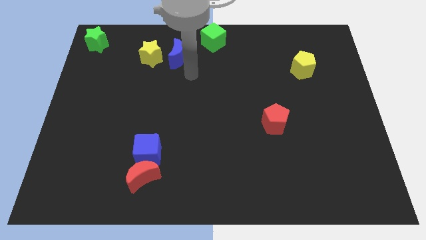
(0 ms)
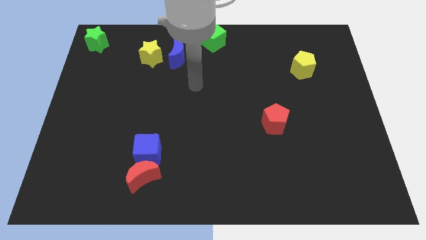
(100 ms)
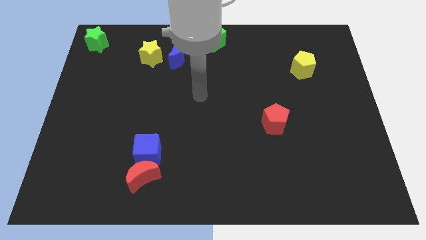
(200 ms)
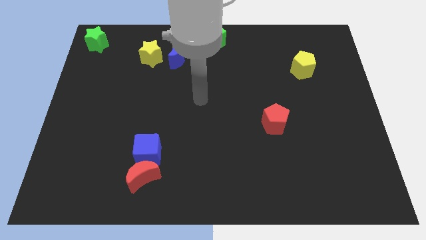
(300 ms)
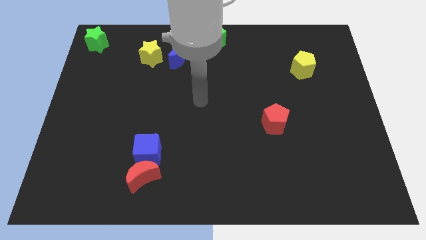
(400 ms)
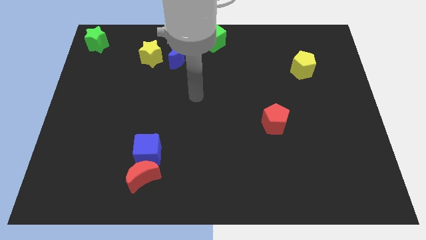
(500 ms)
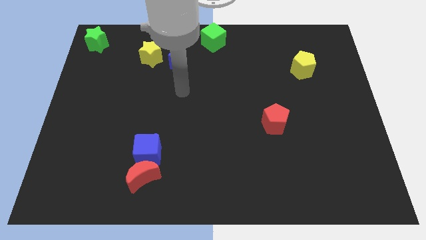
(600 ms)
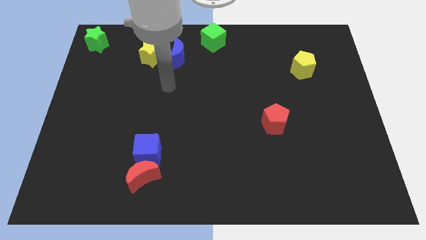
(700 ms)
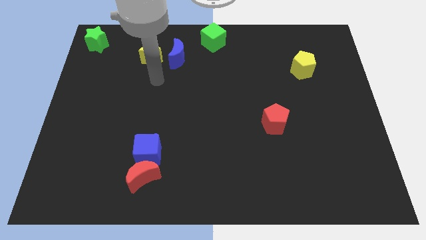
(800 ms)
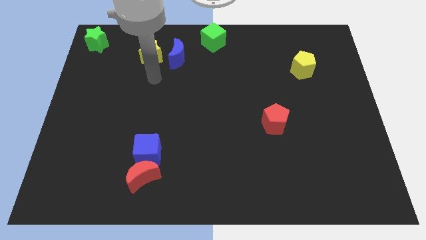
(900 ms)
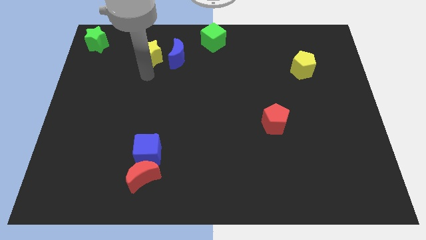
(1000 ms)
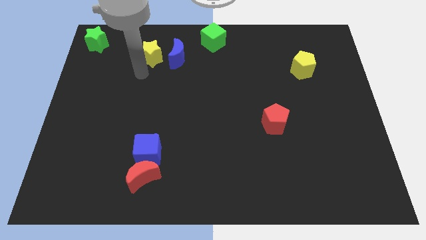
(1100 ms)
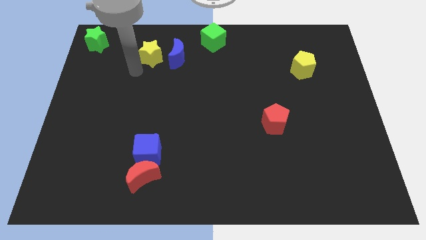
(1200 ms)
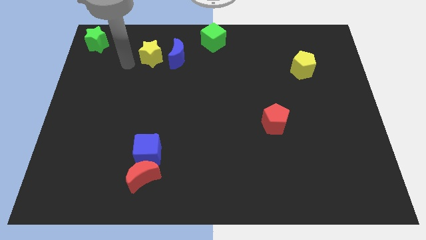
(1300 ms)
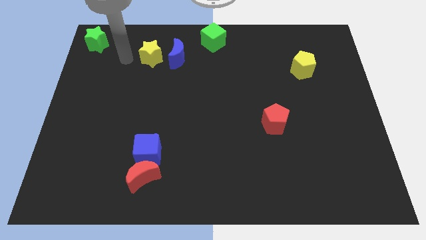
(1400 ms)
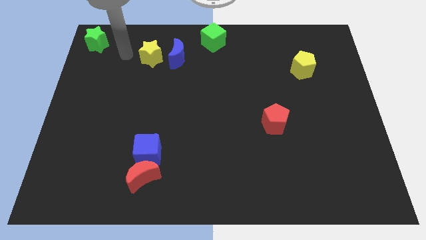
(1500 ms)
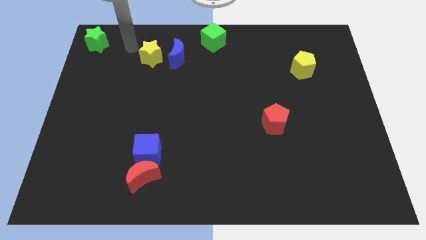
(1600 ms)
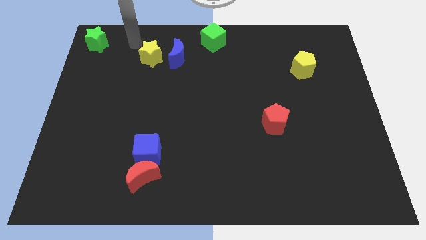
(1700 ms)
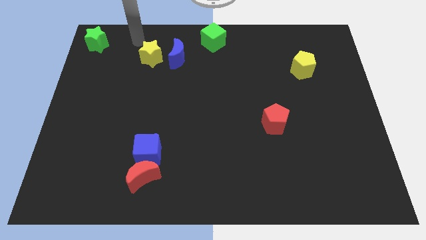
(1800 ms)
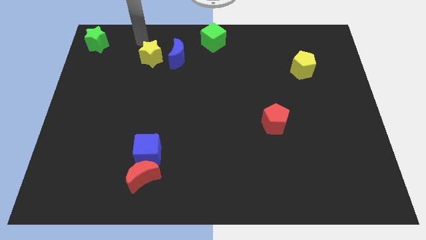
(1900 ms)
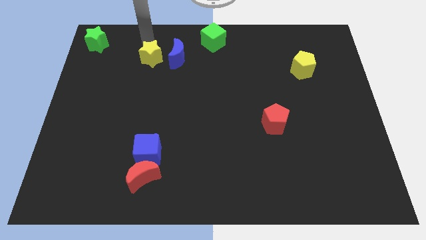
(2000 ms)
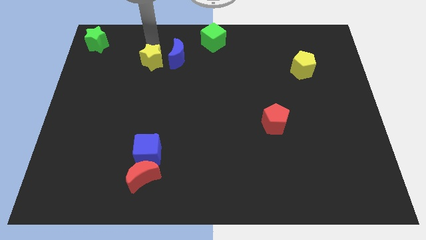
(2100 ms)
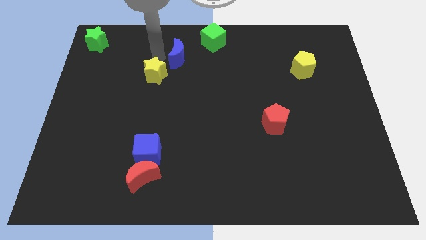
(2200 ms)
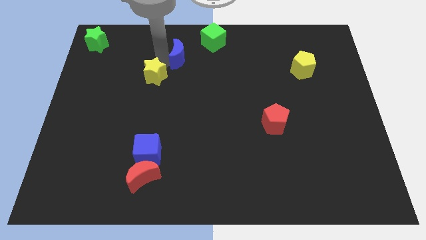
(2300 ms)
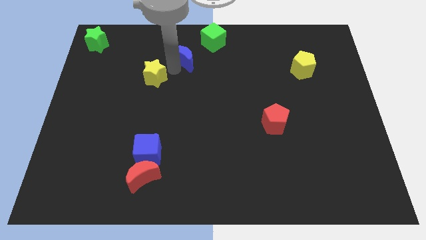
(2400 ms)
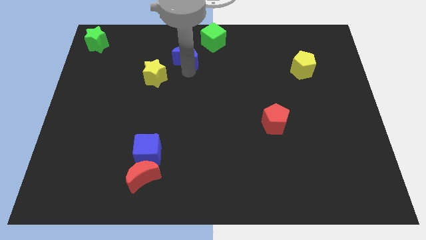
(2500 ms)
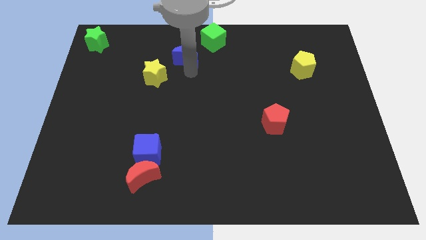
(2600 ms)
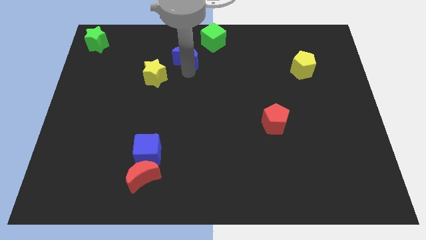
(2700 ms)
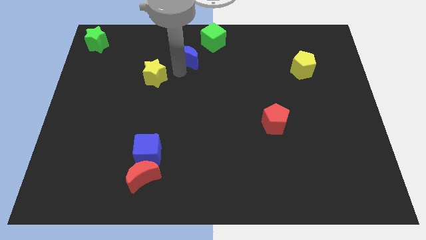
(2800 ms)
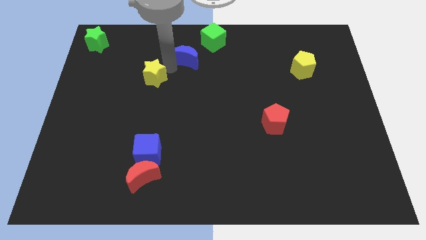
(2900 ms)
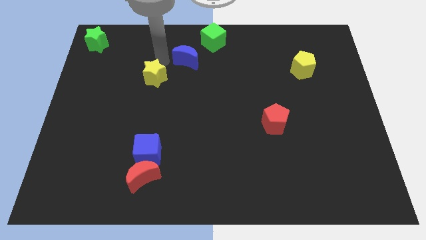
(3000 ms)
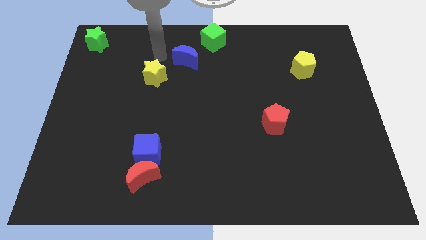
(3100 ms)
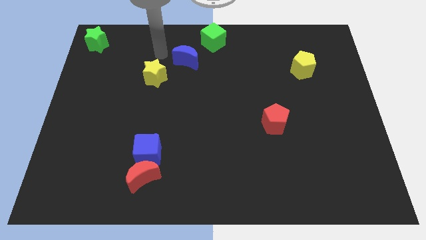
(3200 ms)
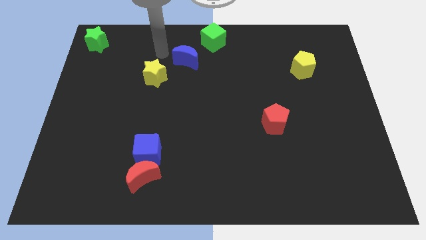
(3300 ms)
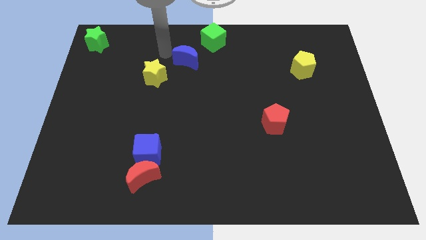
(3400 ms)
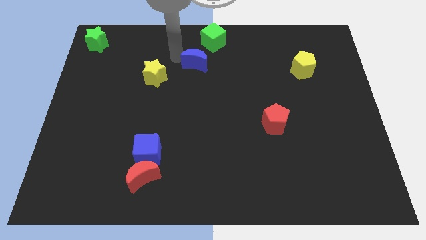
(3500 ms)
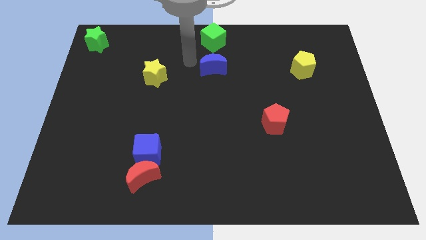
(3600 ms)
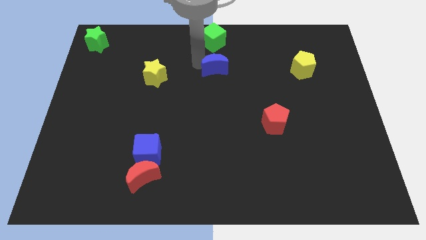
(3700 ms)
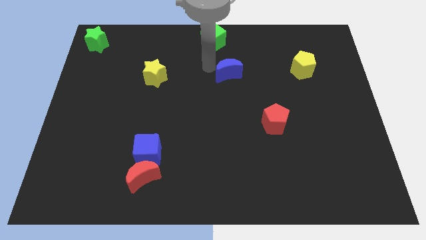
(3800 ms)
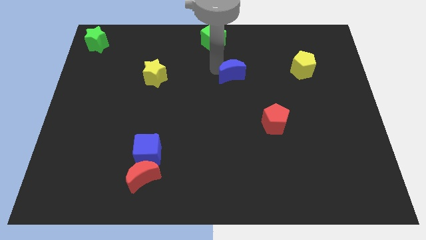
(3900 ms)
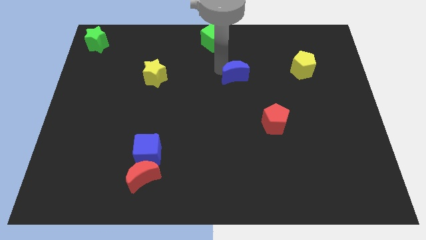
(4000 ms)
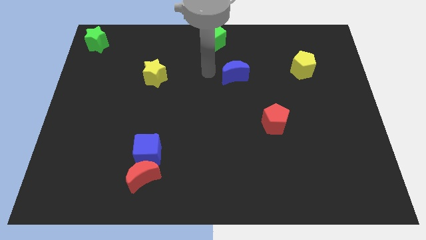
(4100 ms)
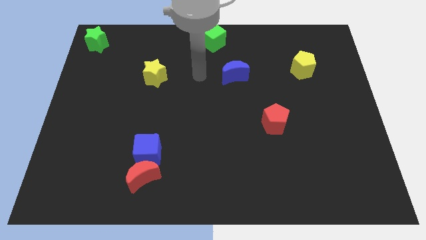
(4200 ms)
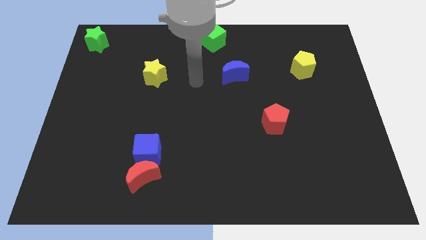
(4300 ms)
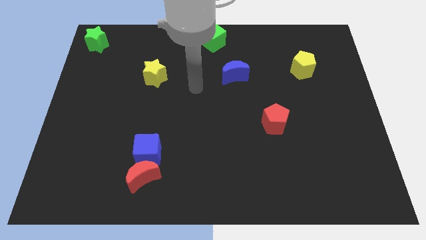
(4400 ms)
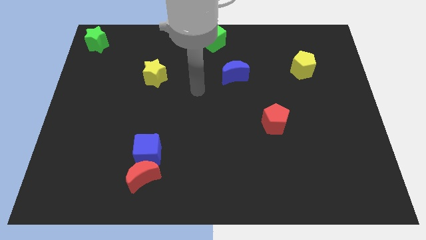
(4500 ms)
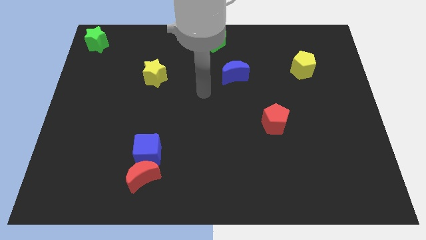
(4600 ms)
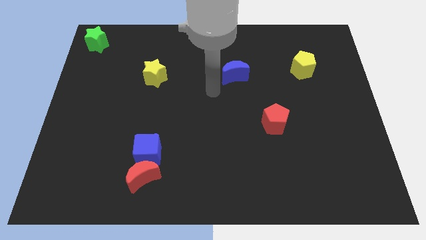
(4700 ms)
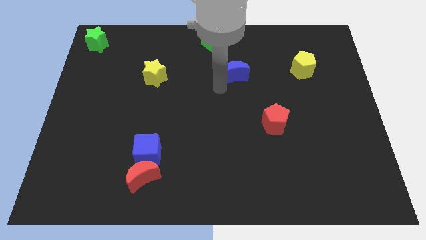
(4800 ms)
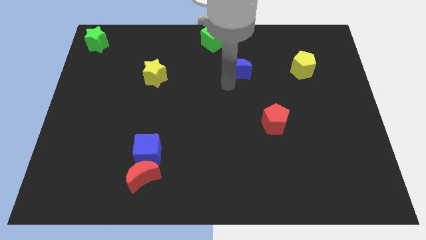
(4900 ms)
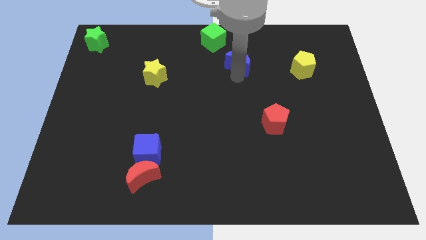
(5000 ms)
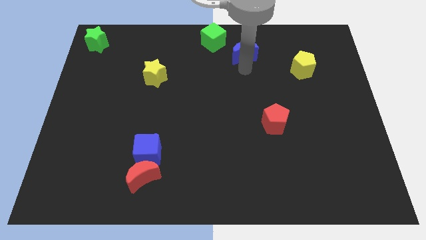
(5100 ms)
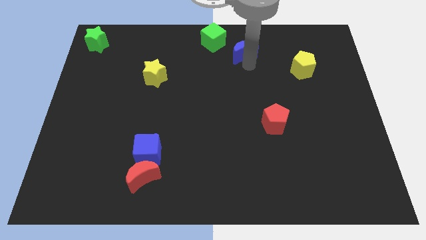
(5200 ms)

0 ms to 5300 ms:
move blue moon apart from the yellow star

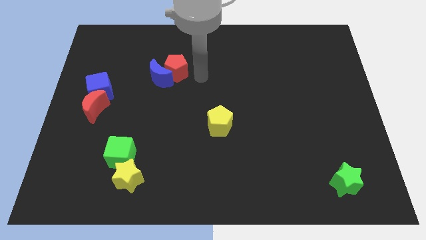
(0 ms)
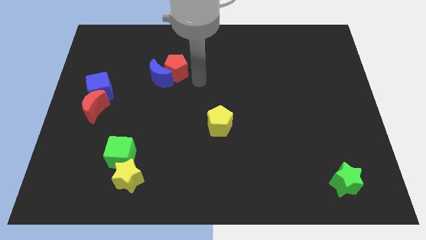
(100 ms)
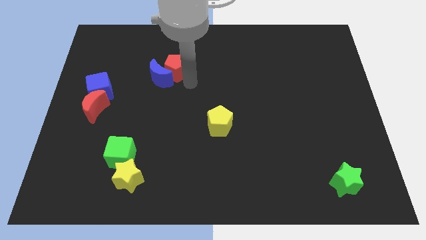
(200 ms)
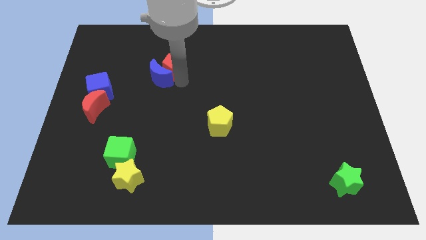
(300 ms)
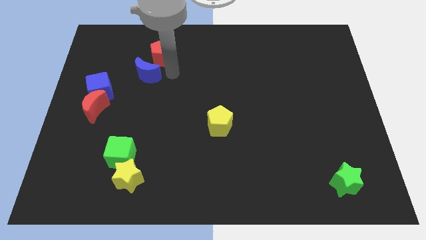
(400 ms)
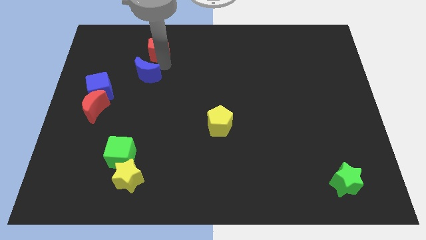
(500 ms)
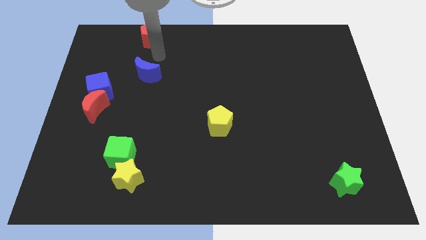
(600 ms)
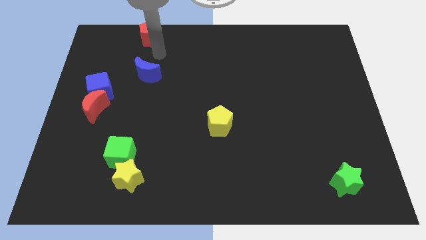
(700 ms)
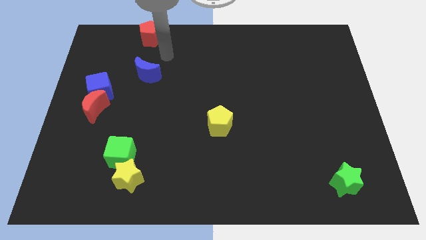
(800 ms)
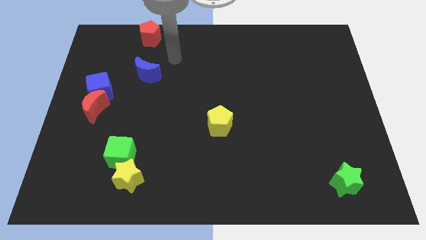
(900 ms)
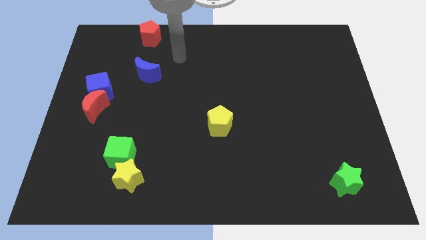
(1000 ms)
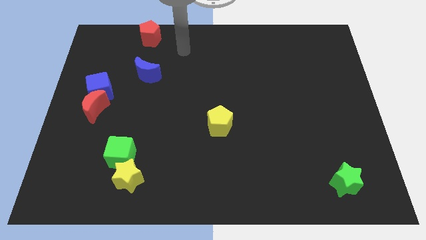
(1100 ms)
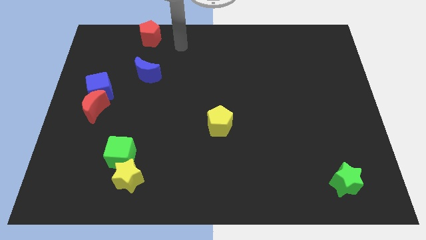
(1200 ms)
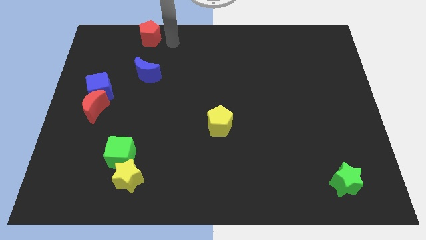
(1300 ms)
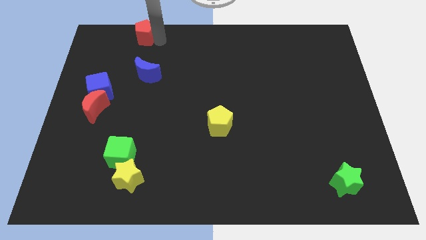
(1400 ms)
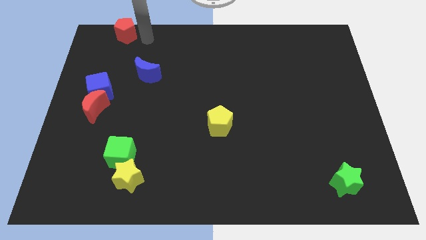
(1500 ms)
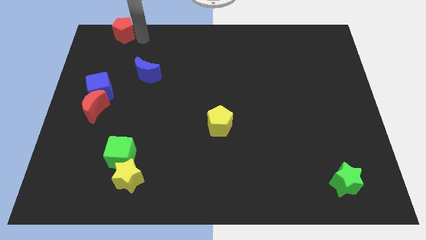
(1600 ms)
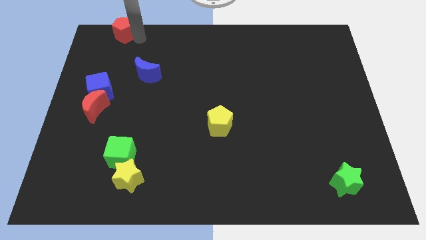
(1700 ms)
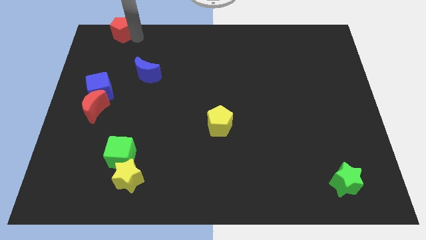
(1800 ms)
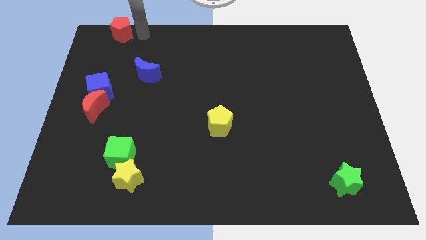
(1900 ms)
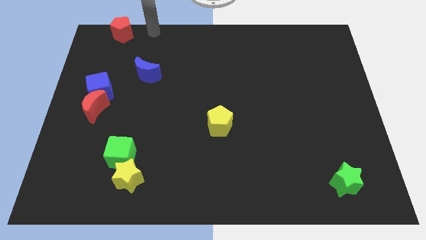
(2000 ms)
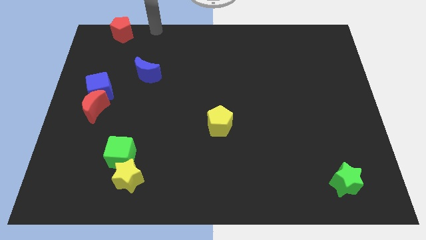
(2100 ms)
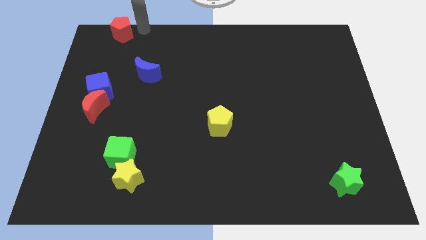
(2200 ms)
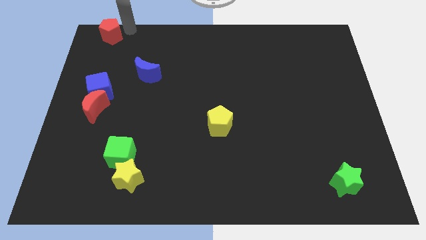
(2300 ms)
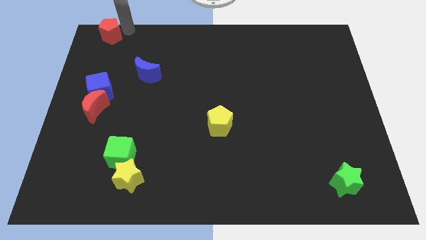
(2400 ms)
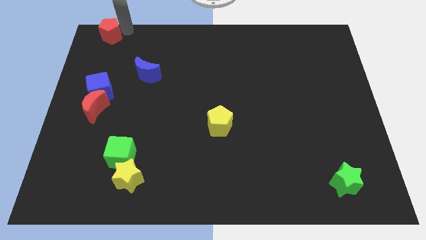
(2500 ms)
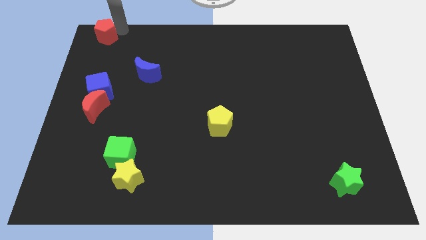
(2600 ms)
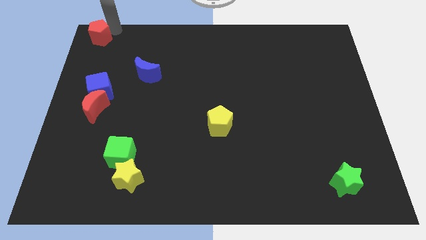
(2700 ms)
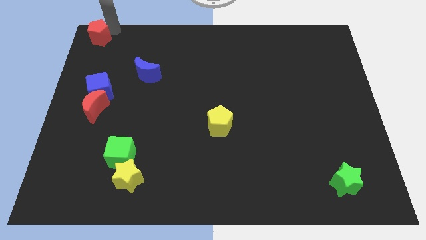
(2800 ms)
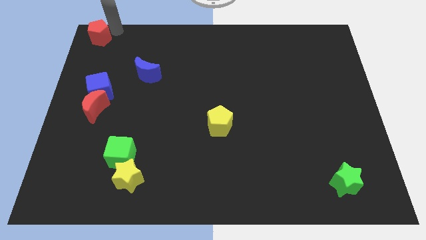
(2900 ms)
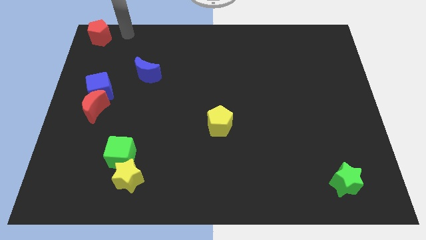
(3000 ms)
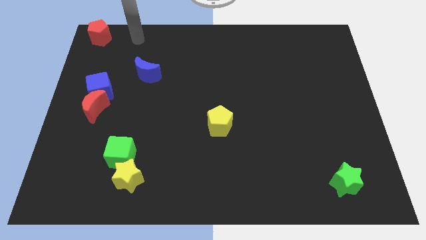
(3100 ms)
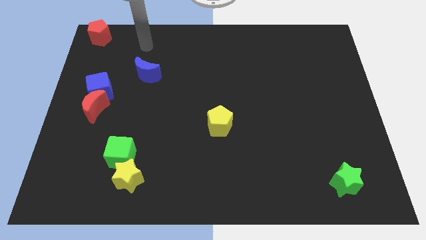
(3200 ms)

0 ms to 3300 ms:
push the red pentagon to the top left side of the table

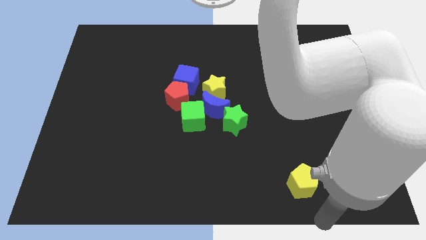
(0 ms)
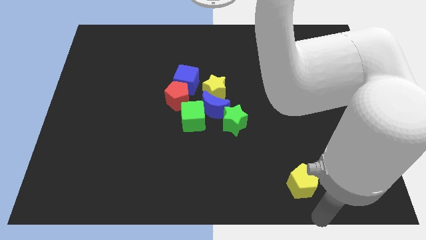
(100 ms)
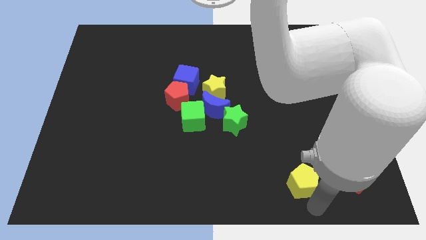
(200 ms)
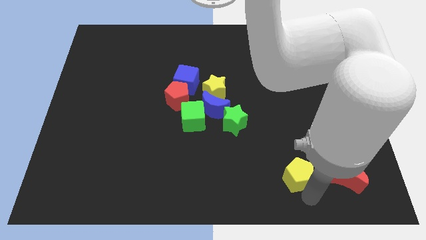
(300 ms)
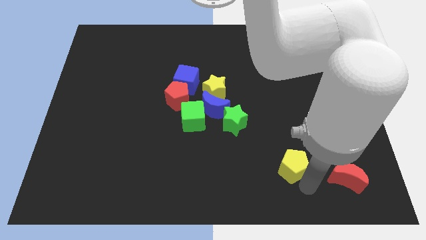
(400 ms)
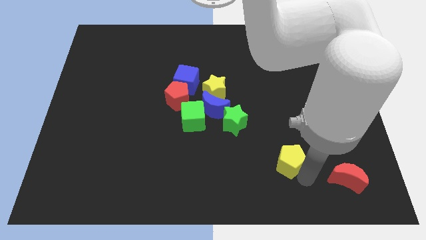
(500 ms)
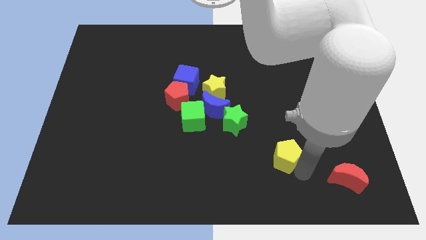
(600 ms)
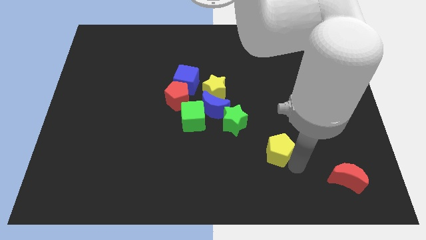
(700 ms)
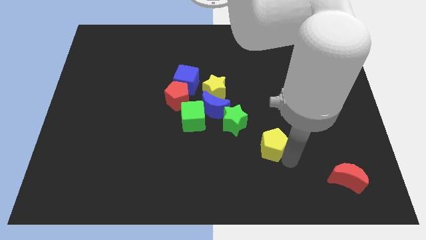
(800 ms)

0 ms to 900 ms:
move the yellow pentagon diagonal to the green star
